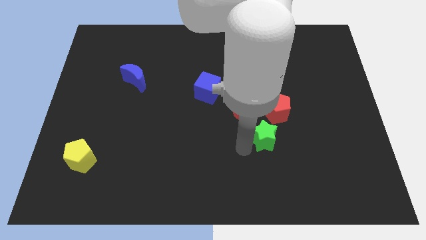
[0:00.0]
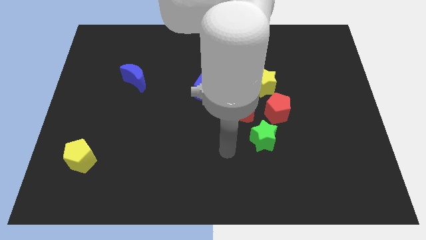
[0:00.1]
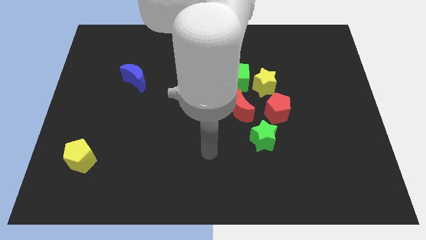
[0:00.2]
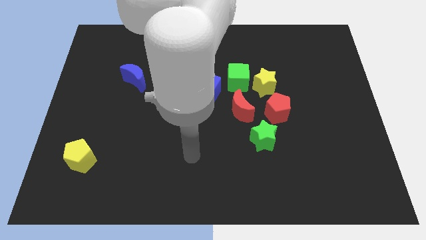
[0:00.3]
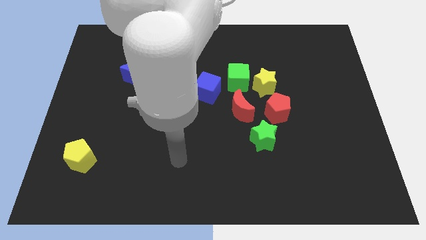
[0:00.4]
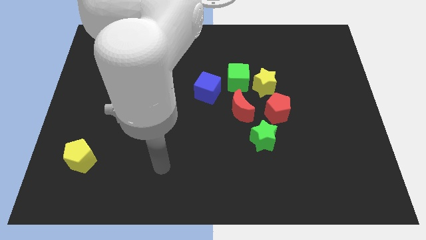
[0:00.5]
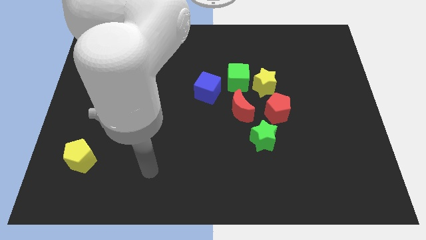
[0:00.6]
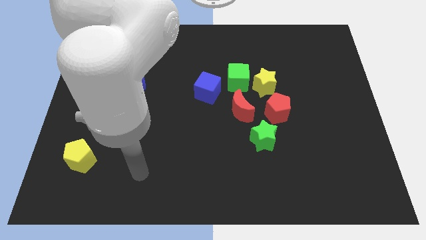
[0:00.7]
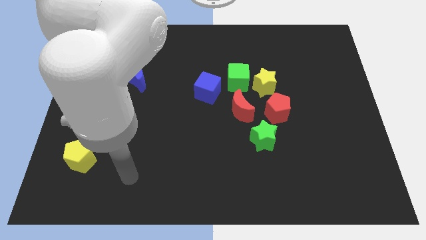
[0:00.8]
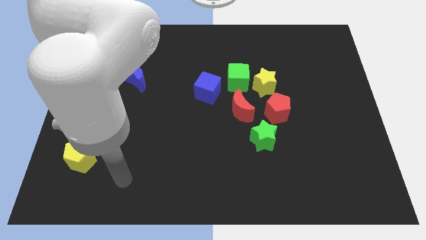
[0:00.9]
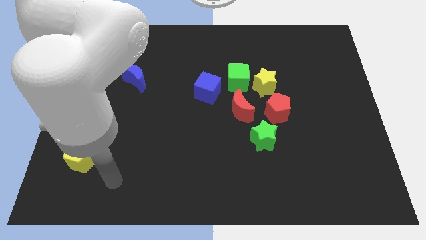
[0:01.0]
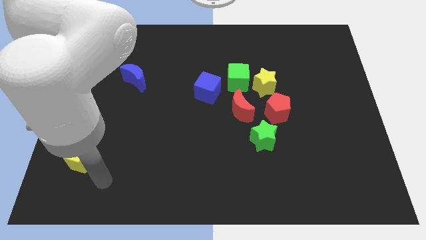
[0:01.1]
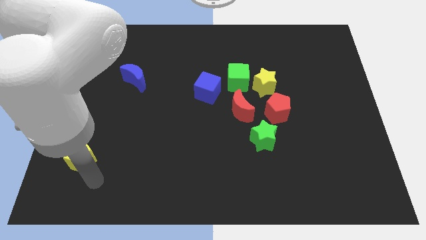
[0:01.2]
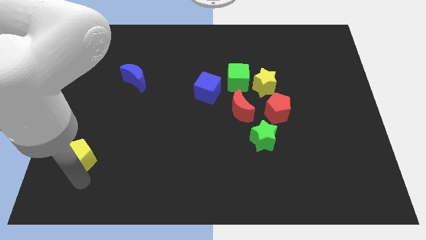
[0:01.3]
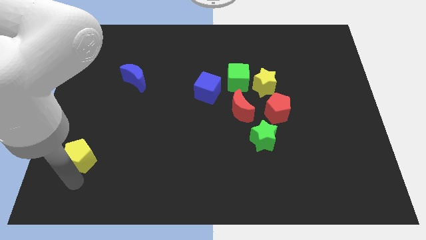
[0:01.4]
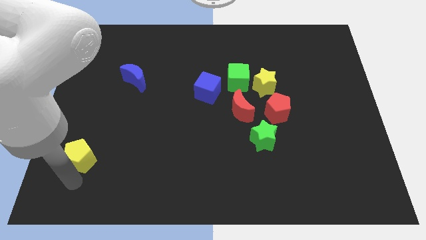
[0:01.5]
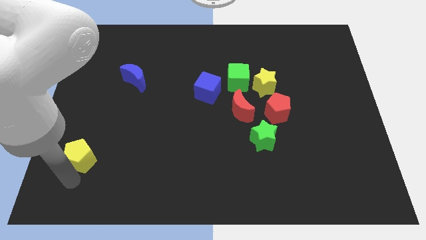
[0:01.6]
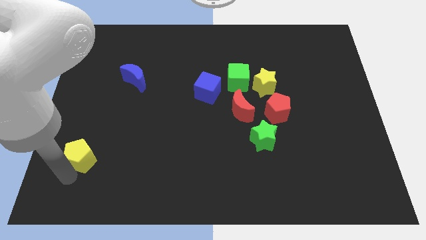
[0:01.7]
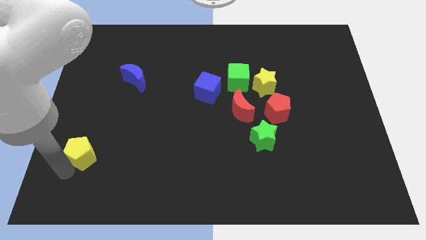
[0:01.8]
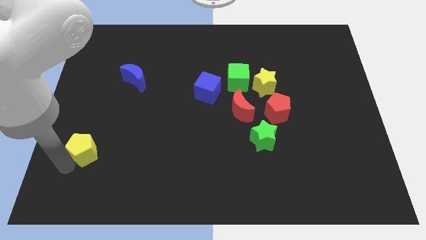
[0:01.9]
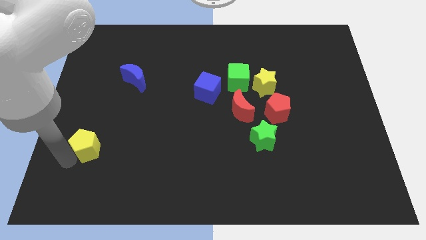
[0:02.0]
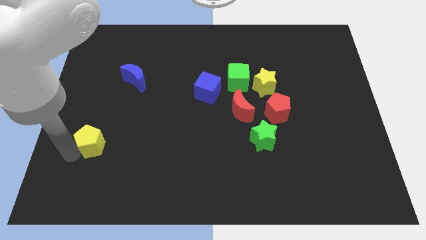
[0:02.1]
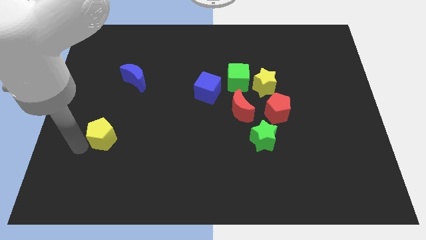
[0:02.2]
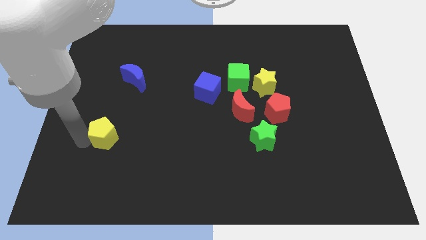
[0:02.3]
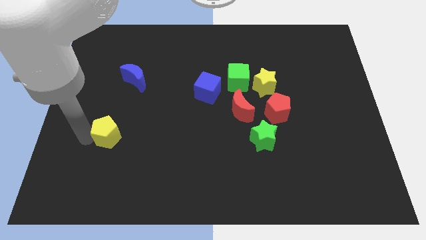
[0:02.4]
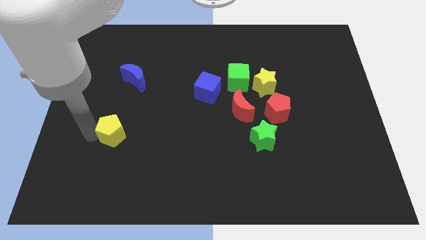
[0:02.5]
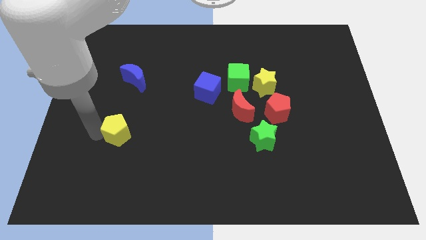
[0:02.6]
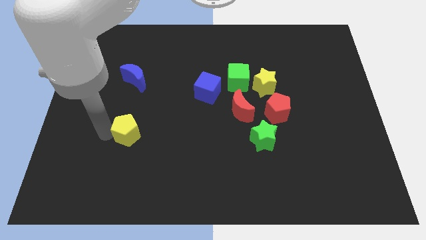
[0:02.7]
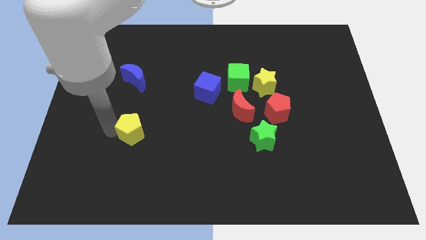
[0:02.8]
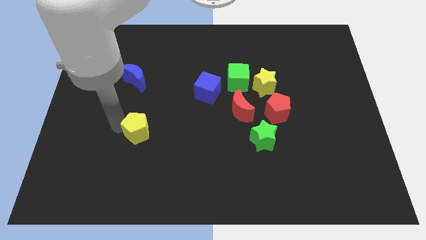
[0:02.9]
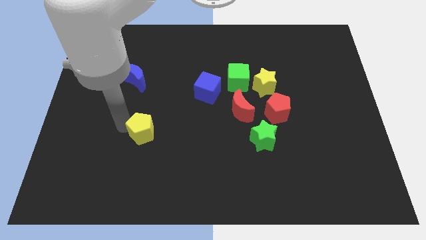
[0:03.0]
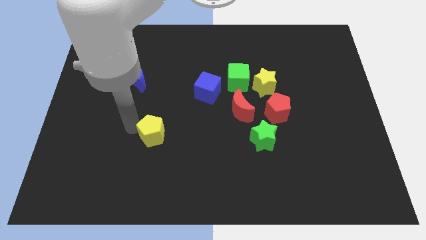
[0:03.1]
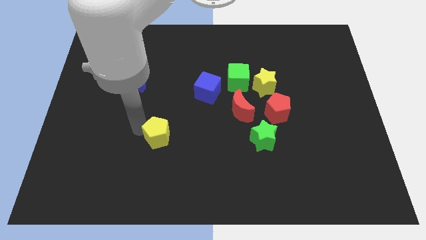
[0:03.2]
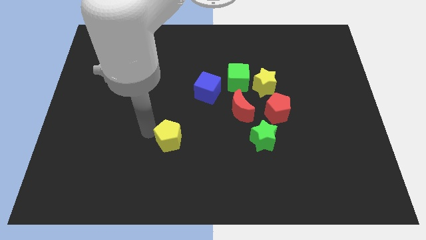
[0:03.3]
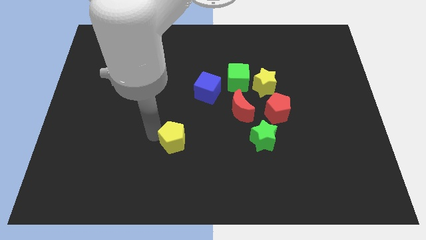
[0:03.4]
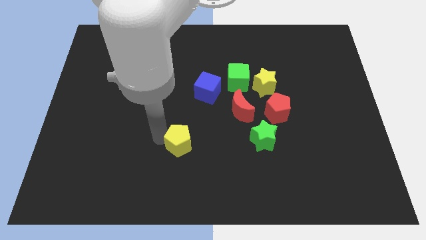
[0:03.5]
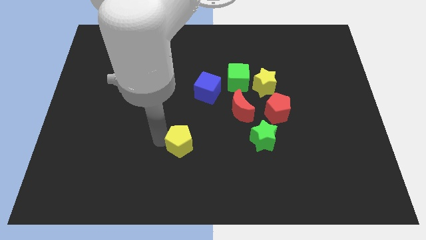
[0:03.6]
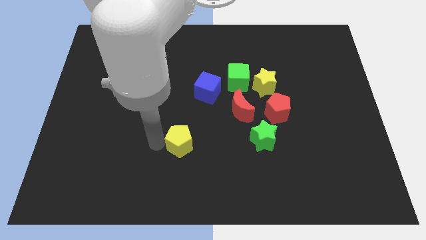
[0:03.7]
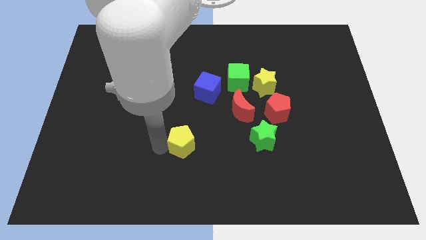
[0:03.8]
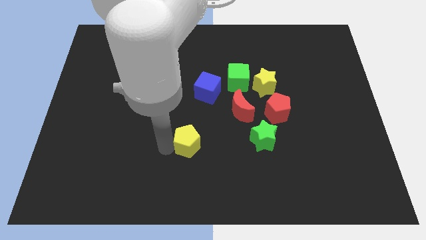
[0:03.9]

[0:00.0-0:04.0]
move the yellow pentagon towards the center of the board

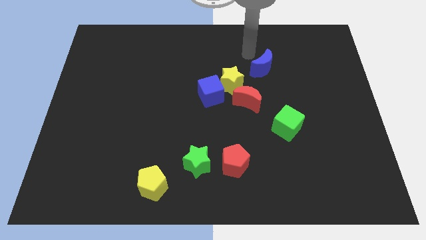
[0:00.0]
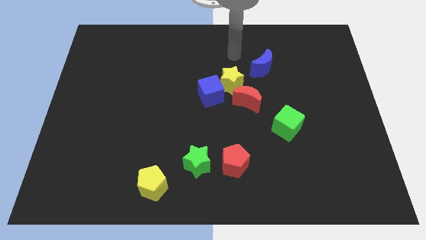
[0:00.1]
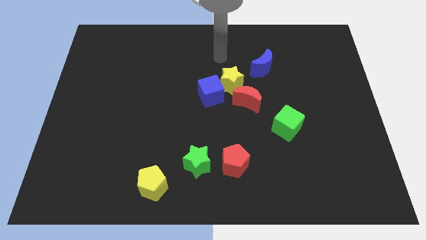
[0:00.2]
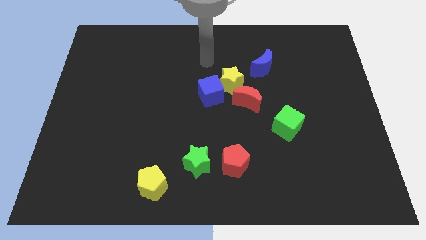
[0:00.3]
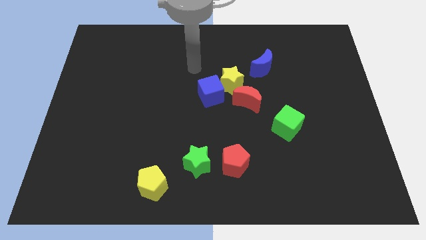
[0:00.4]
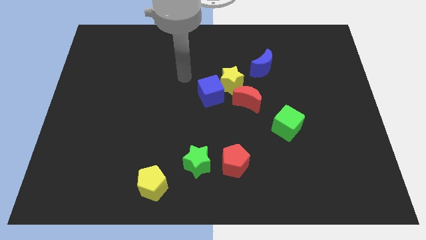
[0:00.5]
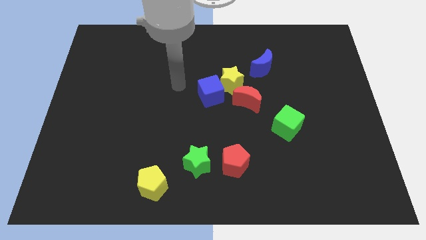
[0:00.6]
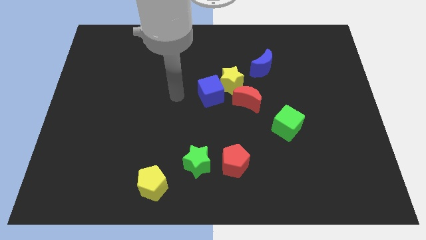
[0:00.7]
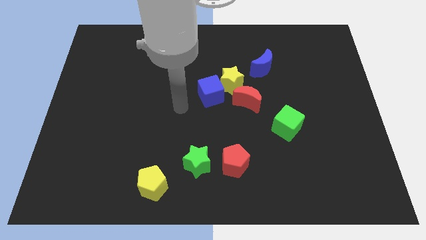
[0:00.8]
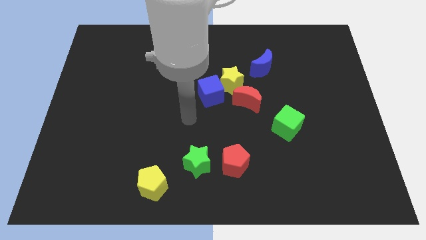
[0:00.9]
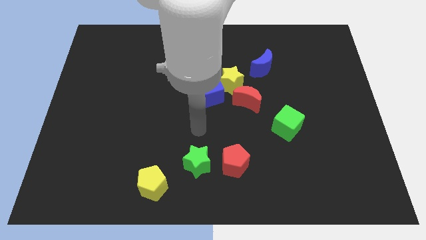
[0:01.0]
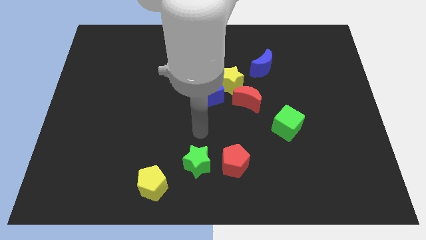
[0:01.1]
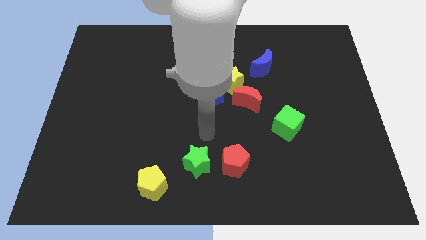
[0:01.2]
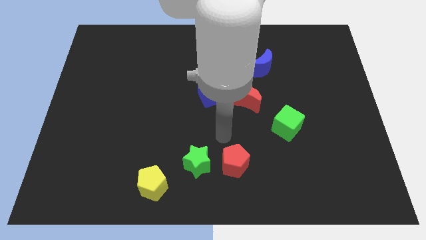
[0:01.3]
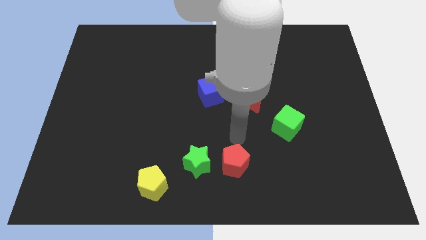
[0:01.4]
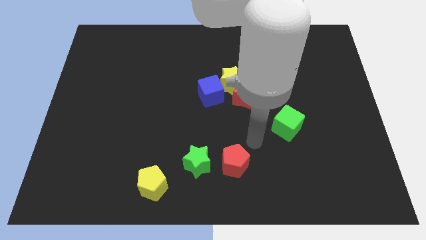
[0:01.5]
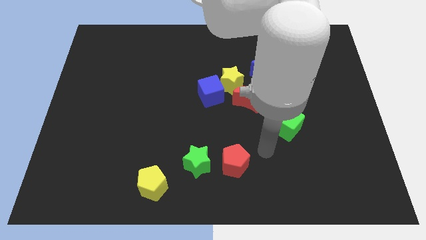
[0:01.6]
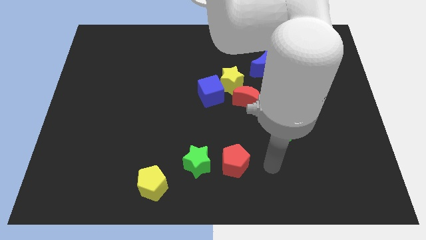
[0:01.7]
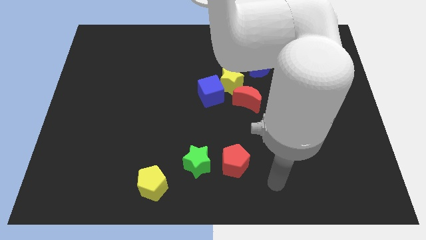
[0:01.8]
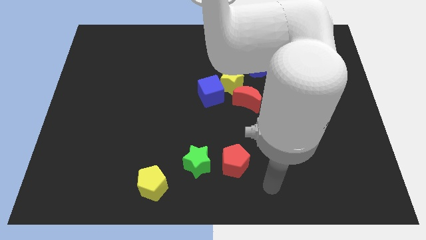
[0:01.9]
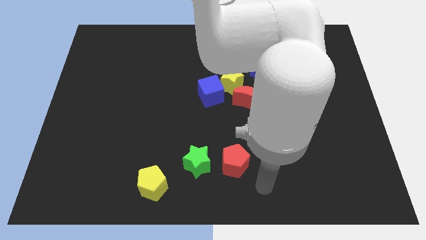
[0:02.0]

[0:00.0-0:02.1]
move your arm to the bottom of the red pentagon

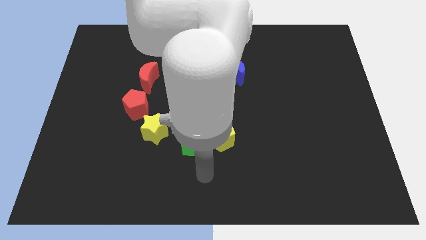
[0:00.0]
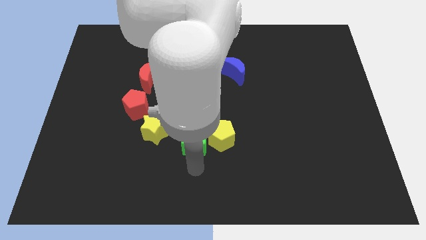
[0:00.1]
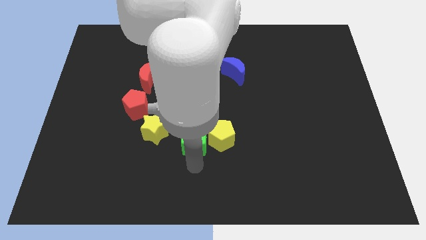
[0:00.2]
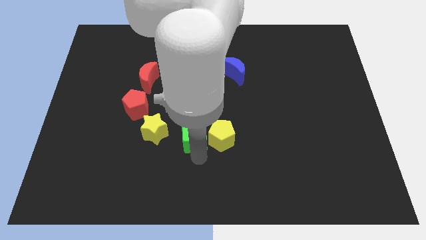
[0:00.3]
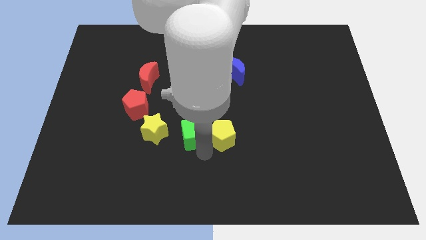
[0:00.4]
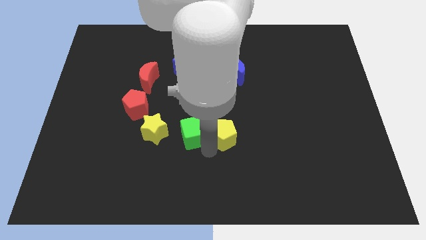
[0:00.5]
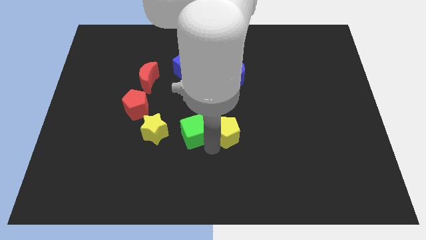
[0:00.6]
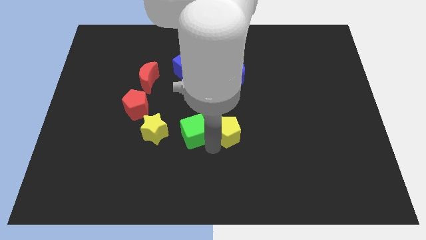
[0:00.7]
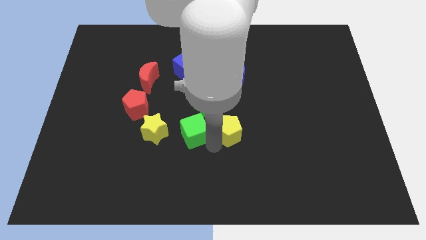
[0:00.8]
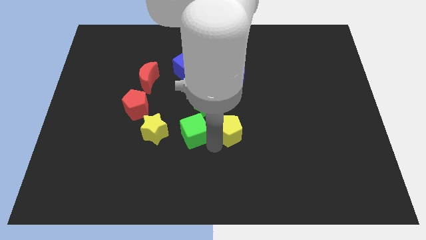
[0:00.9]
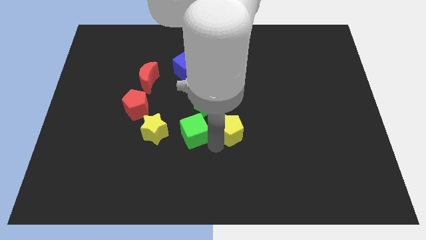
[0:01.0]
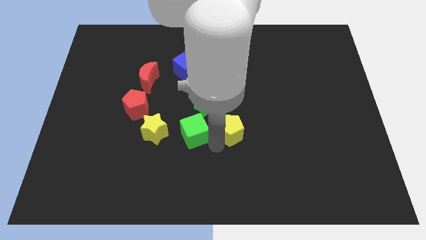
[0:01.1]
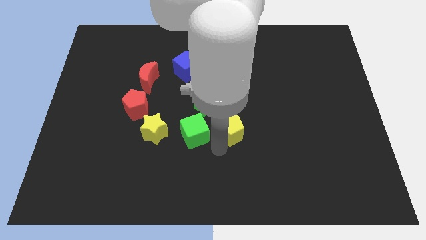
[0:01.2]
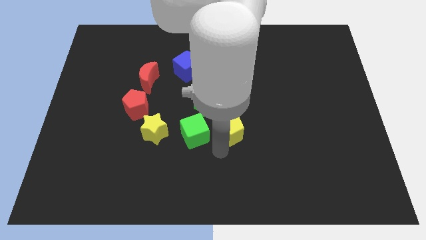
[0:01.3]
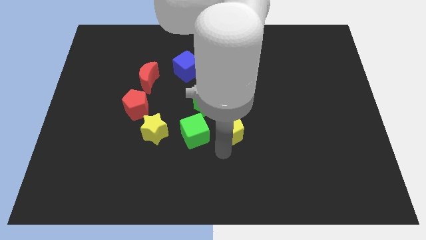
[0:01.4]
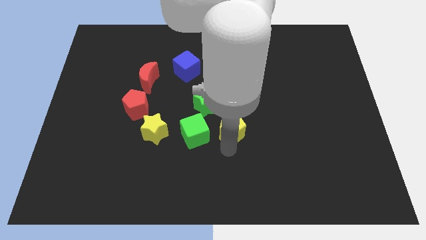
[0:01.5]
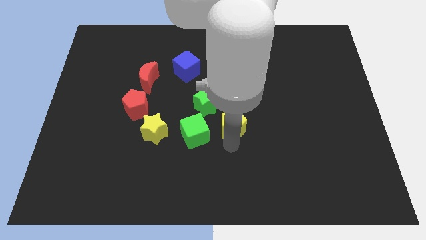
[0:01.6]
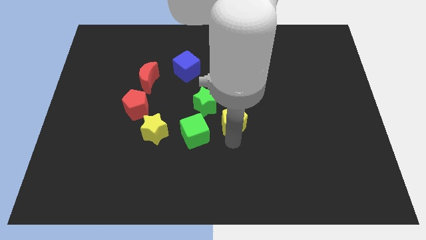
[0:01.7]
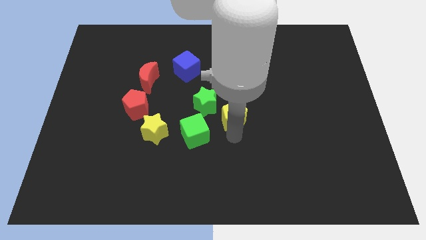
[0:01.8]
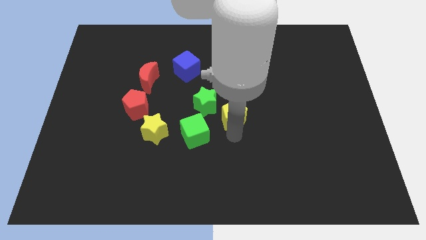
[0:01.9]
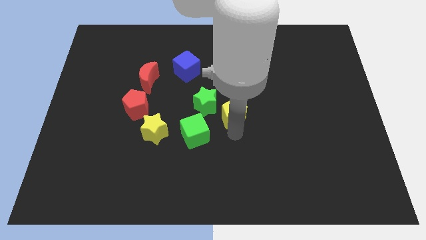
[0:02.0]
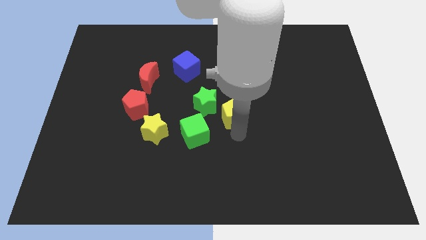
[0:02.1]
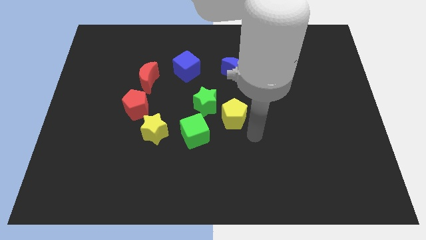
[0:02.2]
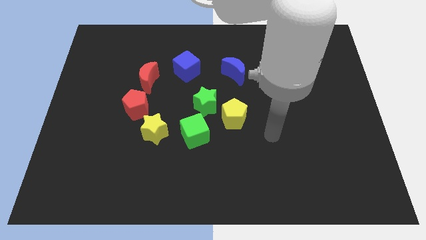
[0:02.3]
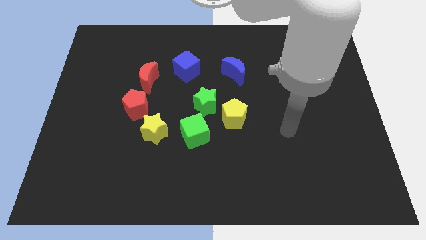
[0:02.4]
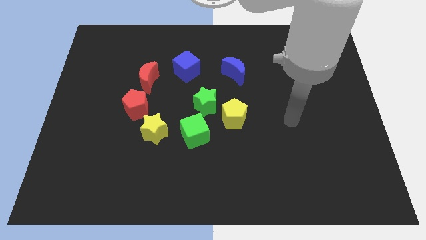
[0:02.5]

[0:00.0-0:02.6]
move the yellow pentagon below to the green star

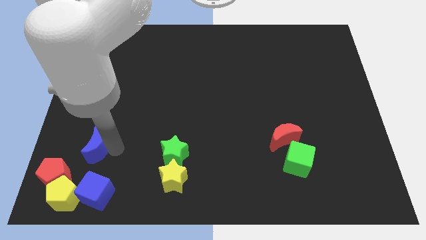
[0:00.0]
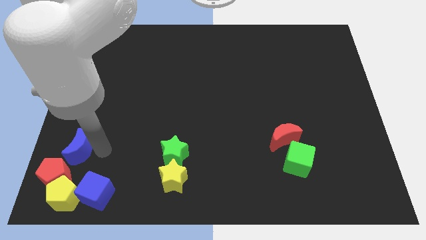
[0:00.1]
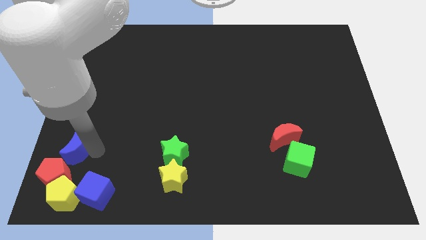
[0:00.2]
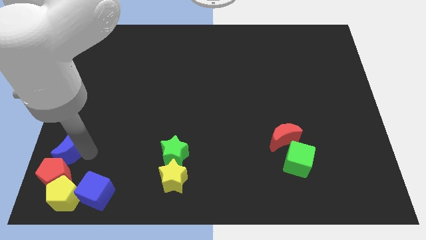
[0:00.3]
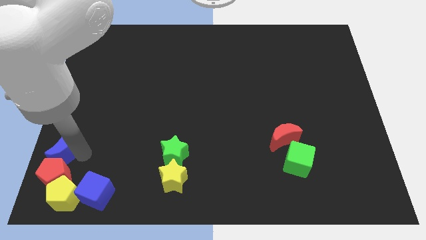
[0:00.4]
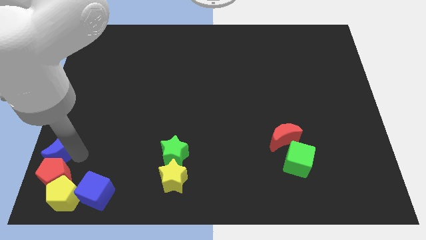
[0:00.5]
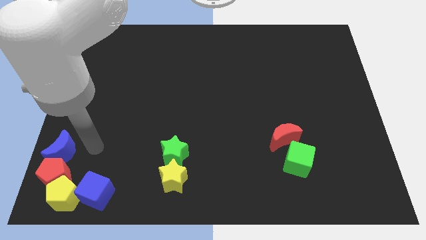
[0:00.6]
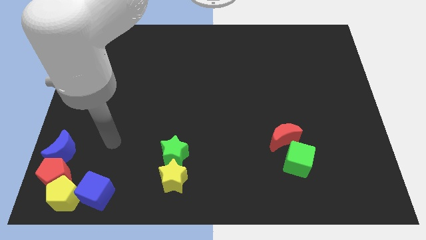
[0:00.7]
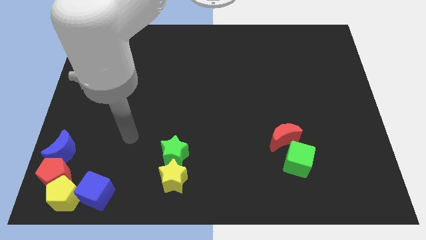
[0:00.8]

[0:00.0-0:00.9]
slide blue moon above red pentagon
